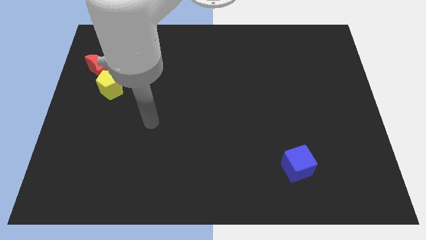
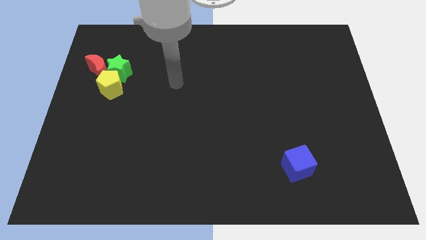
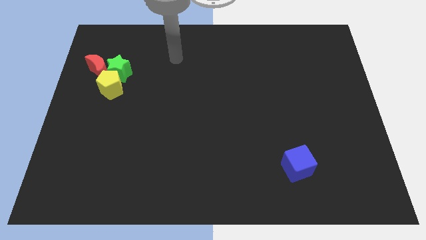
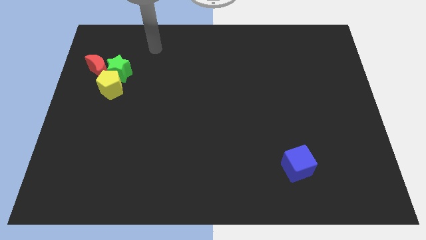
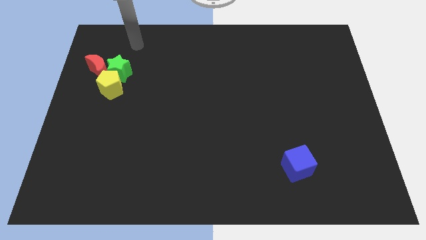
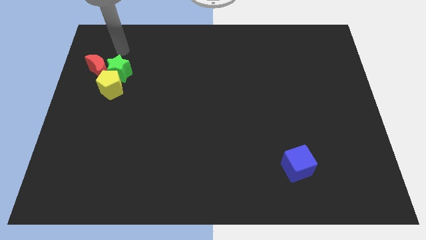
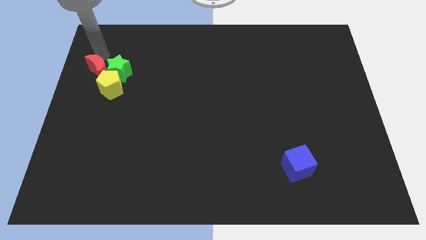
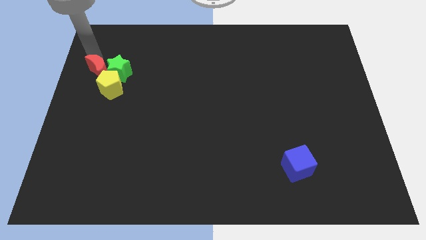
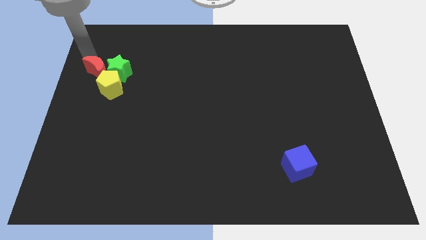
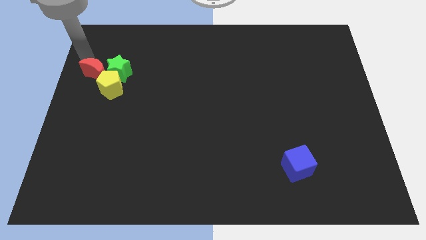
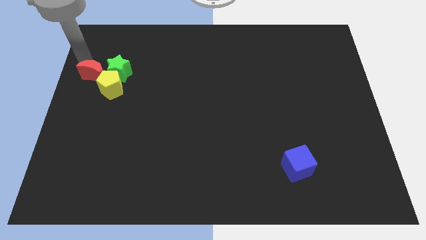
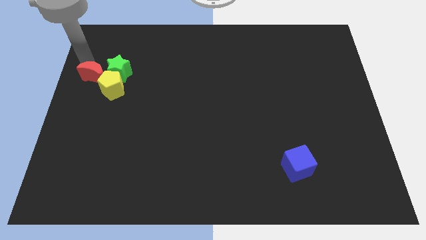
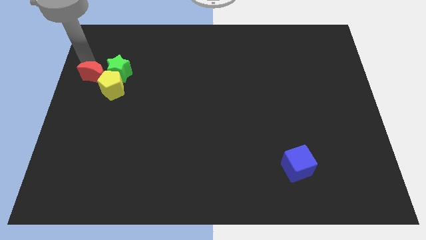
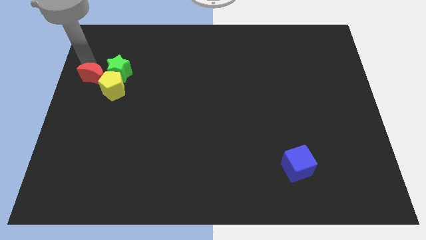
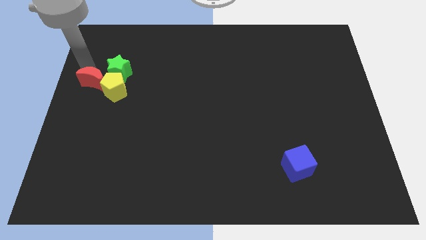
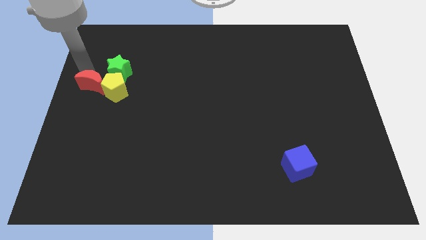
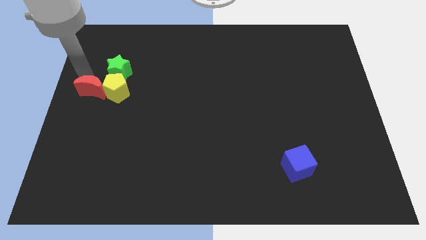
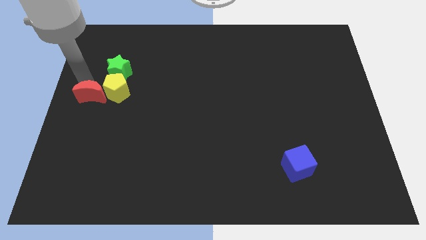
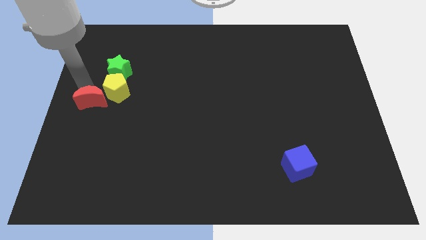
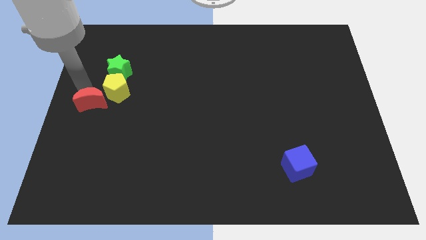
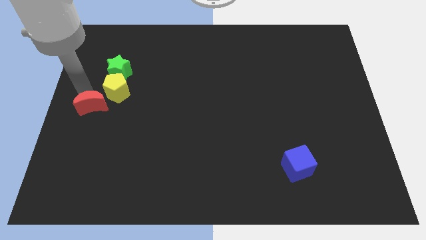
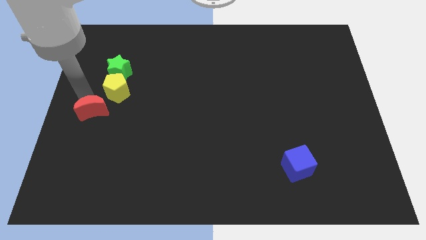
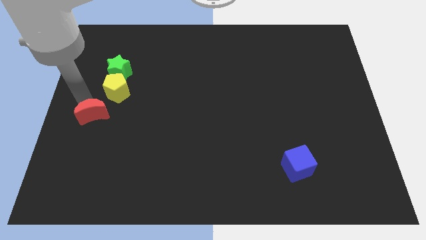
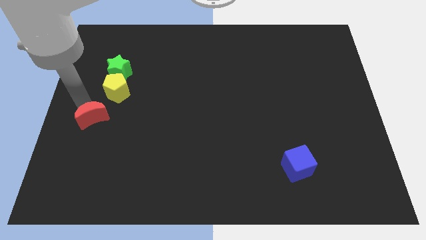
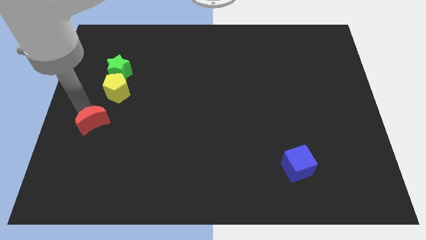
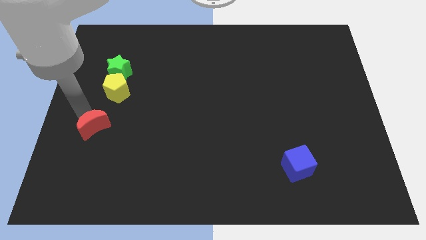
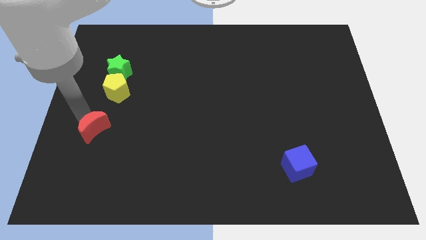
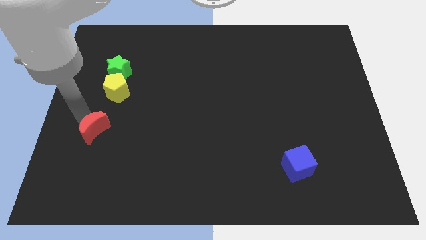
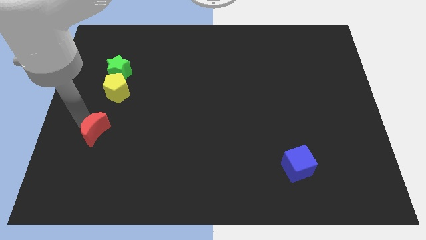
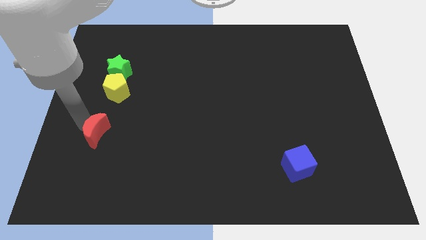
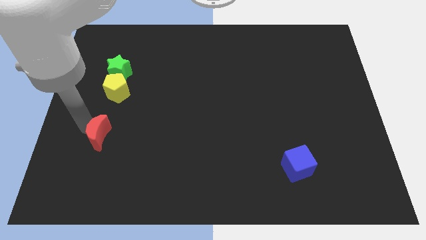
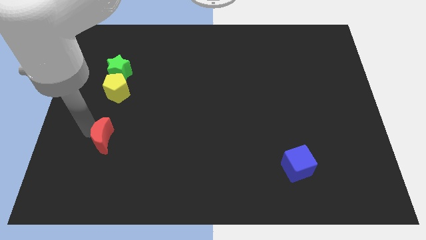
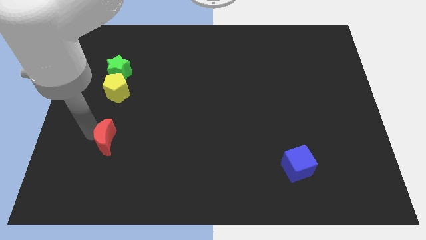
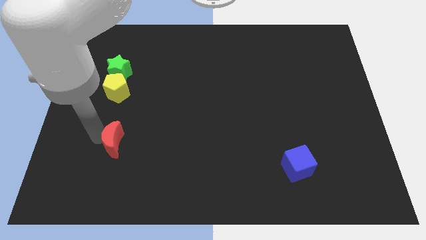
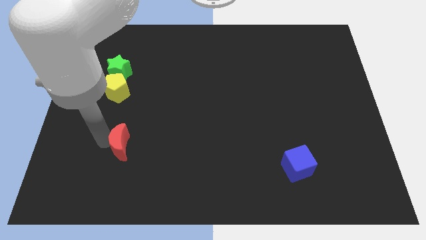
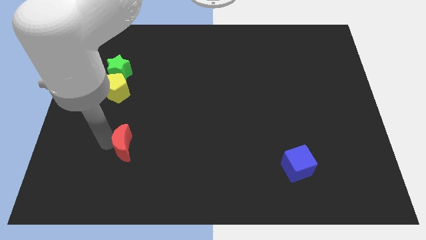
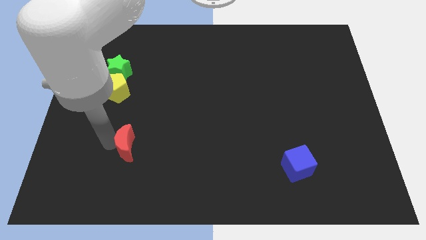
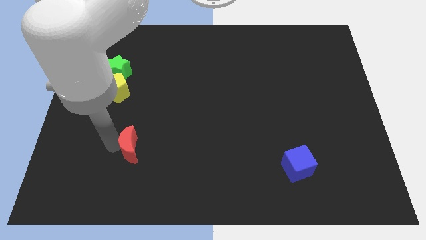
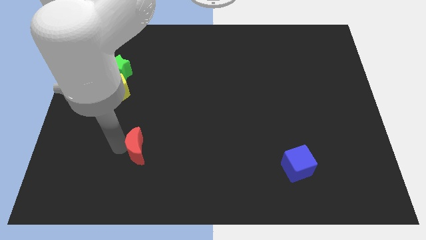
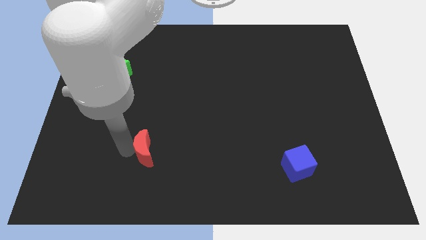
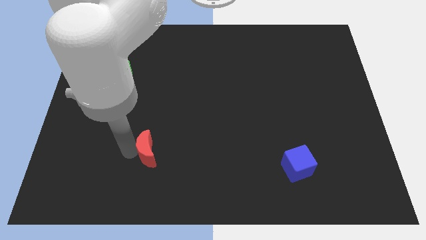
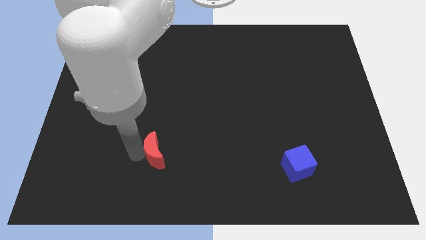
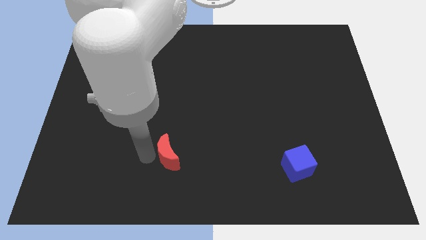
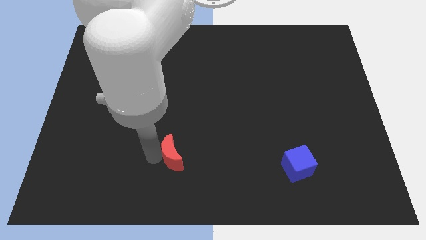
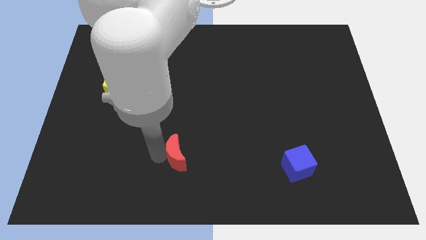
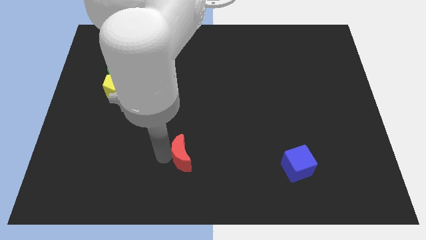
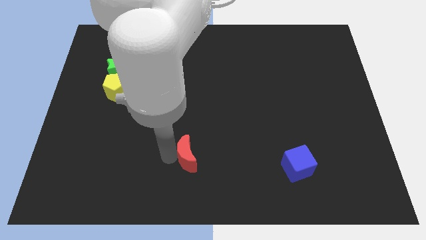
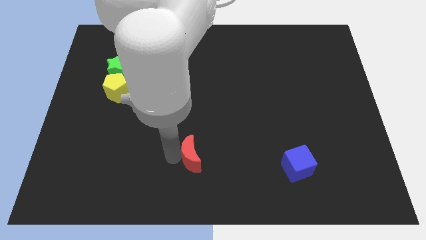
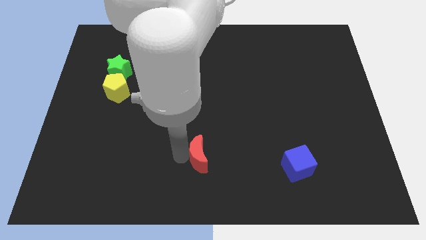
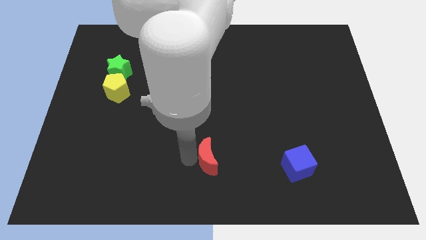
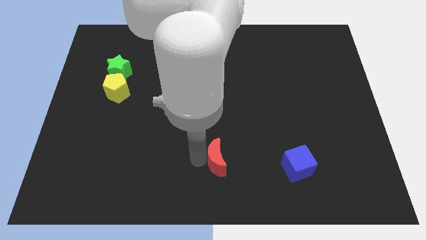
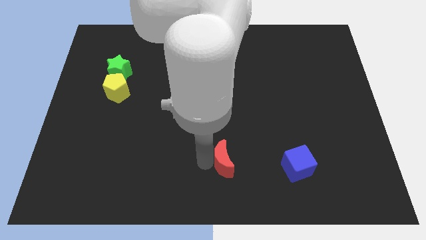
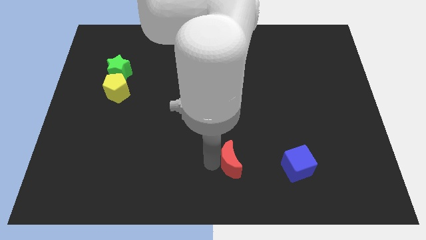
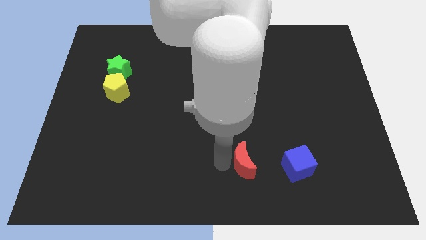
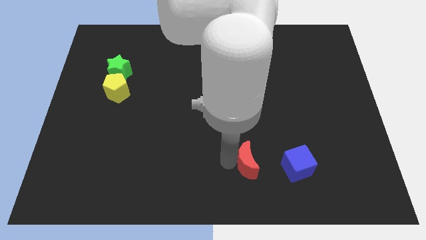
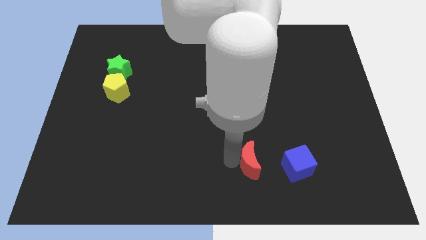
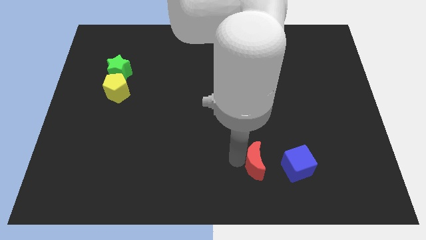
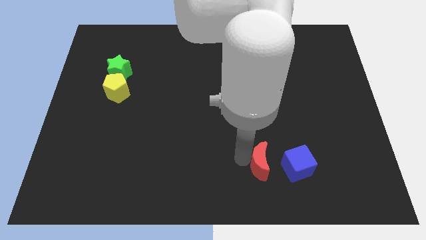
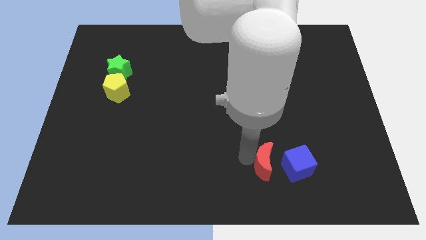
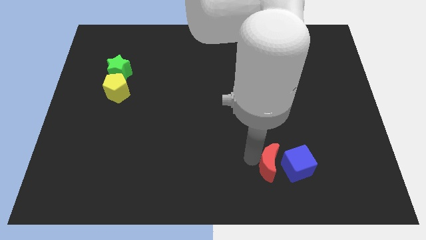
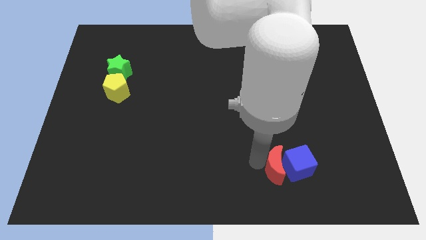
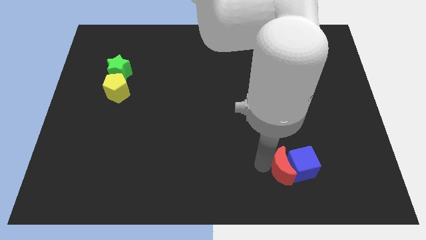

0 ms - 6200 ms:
slide the moon to the cube

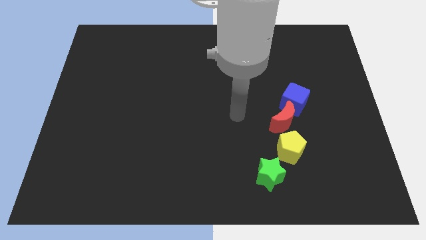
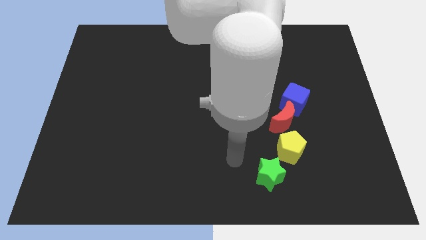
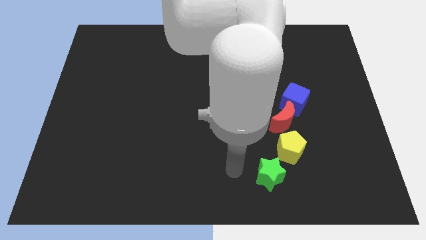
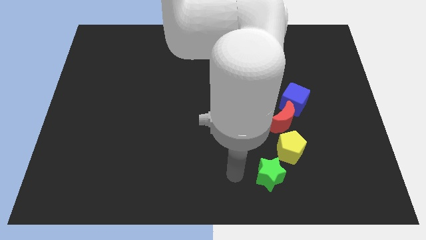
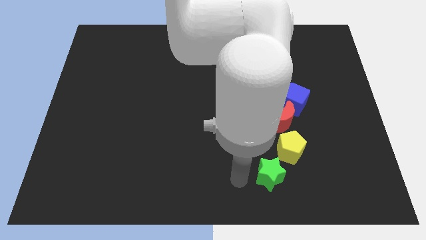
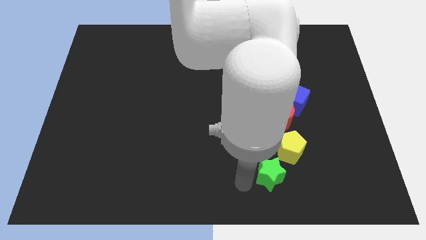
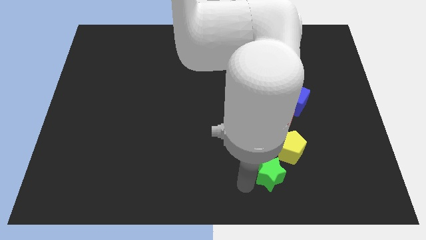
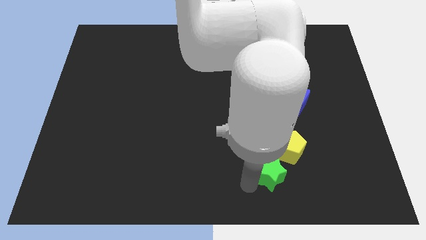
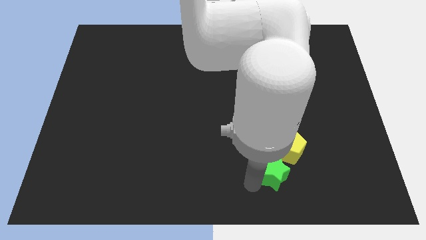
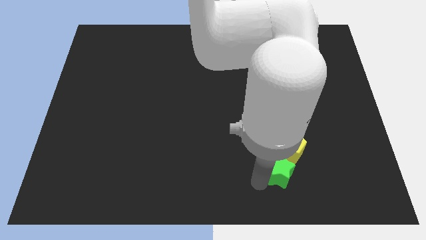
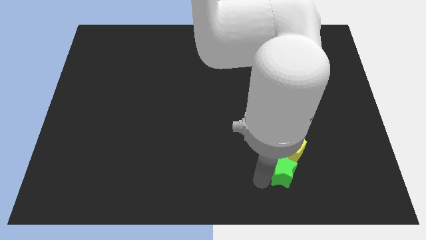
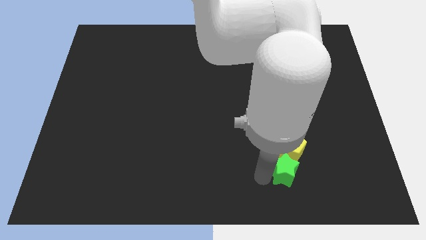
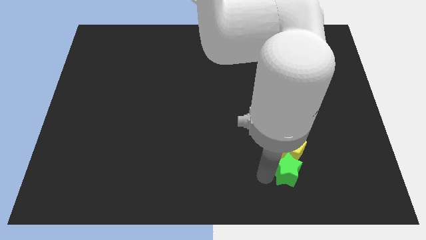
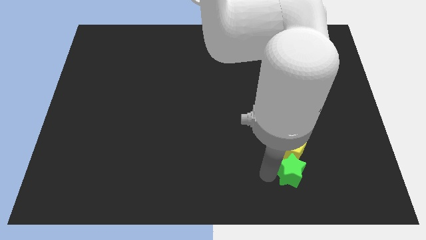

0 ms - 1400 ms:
slide the green block towards the pentagon

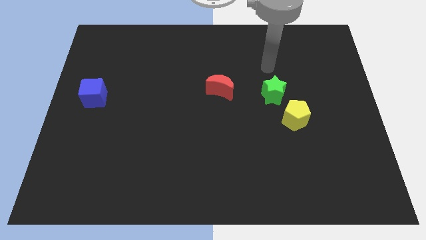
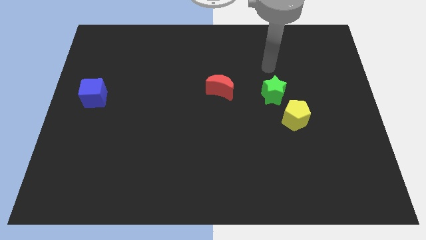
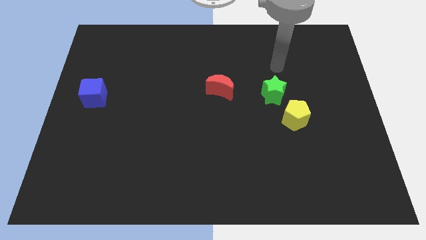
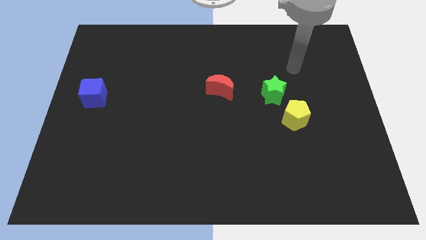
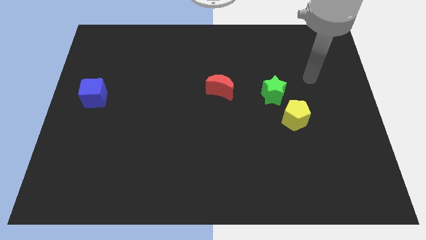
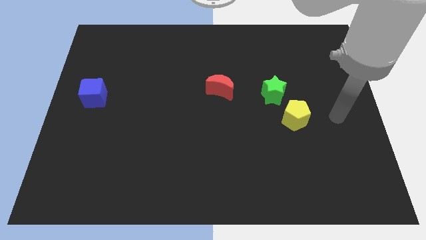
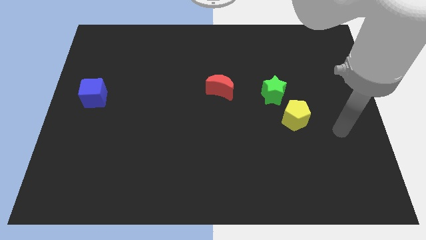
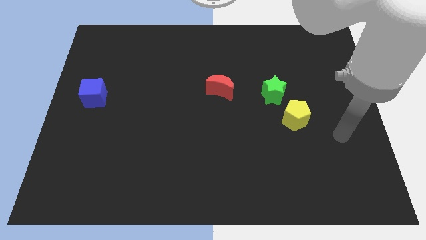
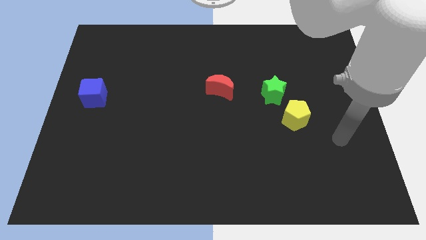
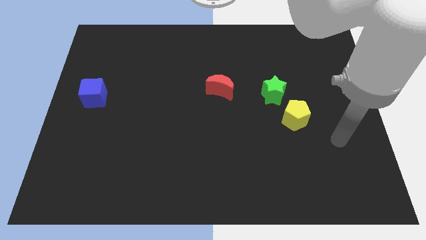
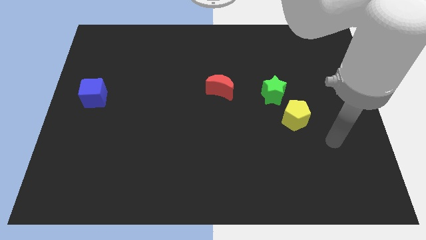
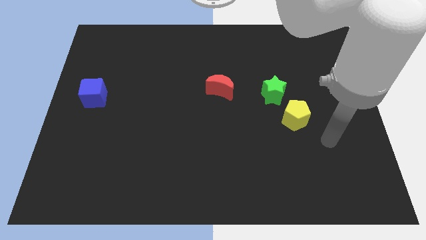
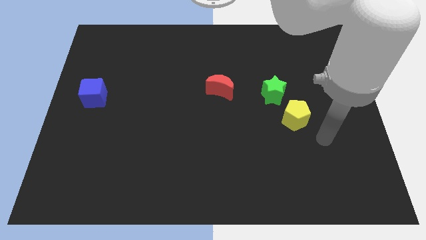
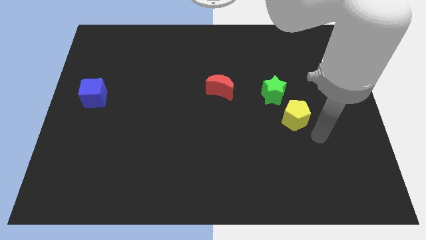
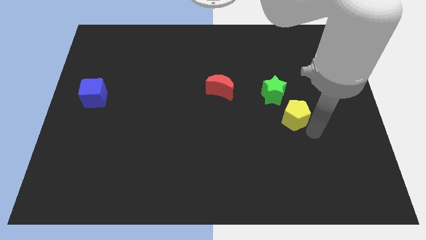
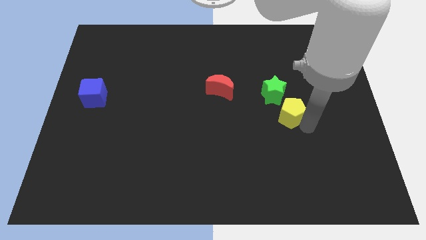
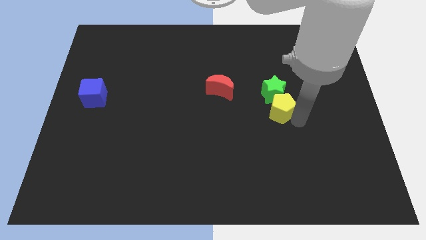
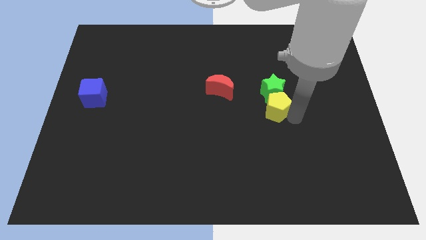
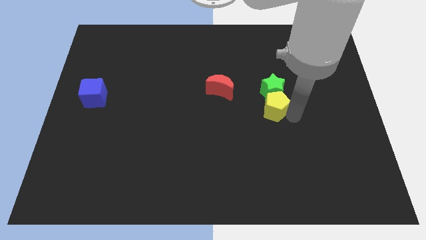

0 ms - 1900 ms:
move the pentagon close to the green block
